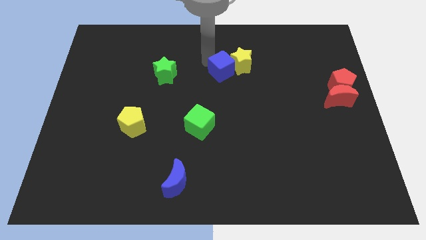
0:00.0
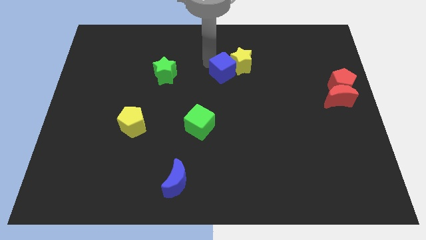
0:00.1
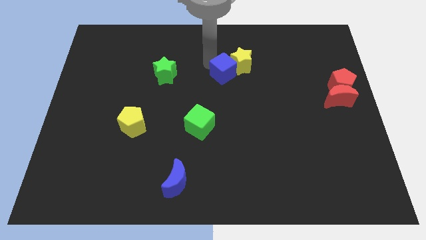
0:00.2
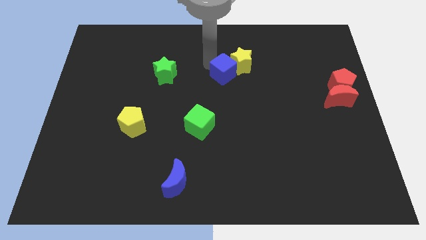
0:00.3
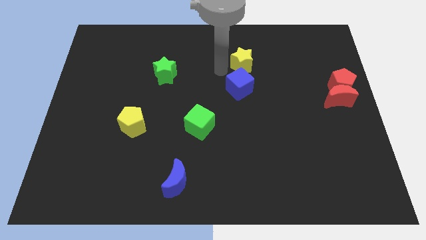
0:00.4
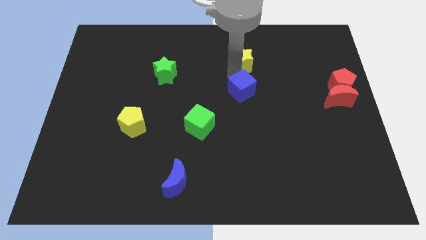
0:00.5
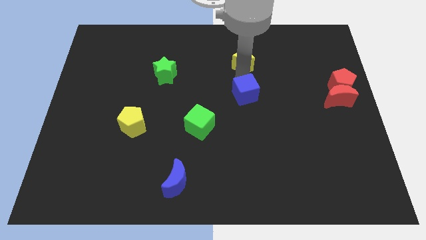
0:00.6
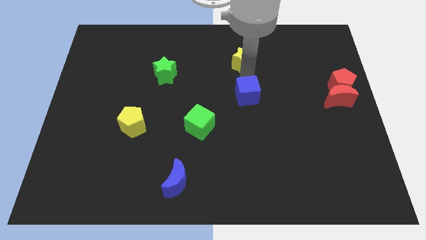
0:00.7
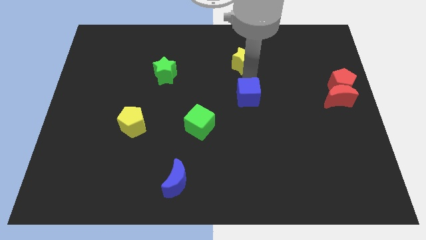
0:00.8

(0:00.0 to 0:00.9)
move the blue cube below the yellow star

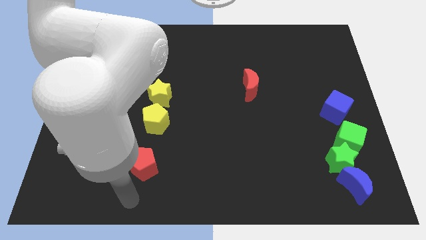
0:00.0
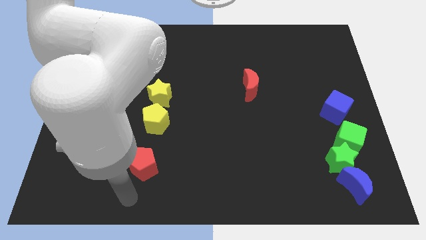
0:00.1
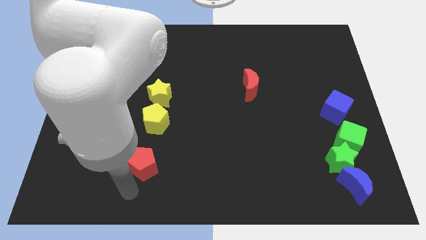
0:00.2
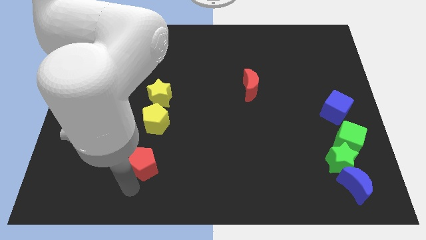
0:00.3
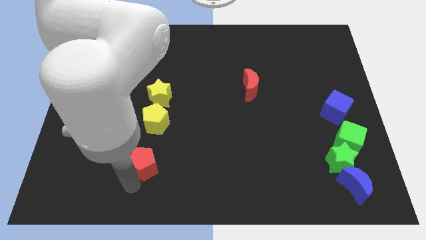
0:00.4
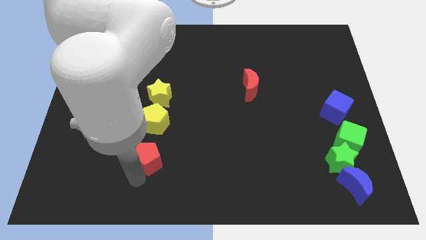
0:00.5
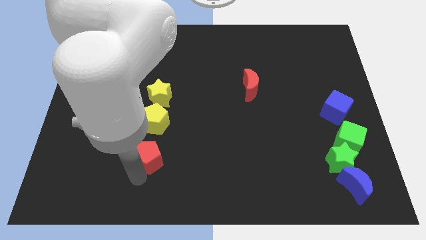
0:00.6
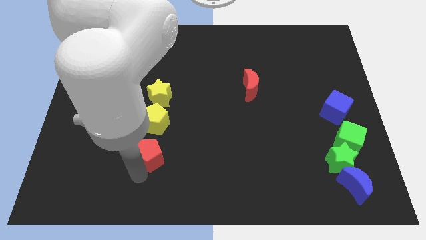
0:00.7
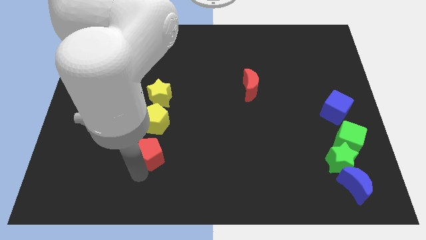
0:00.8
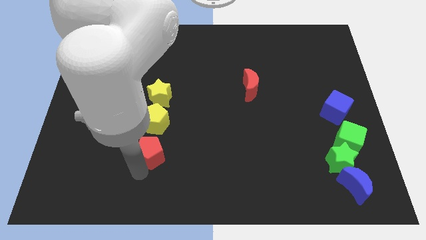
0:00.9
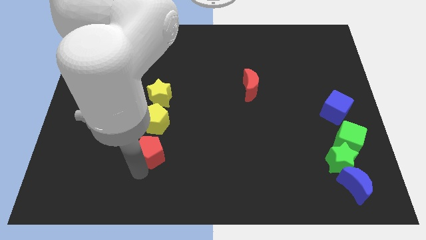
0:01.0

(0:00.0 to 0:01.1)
move the red pentagon vertically below the yellow pentagon

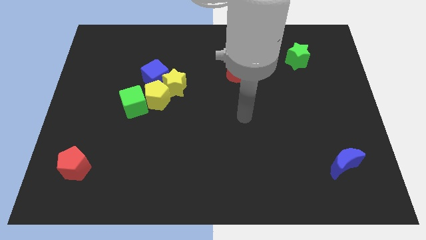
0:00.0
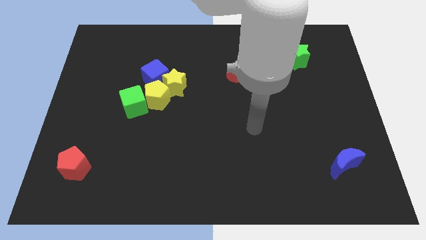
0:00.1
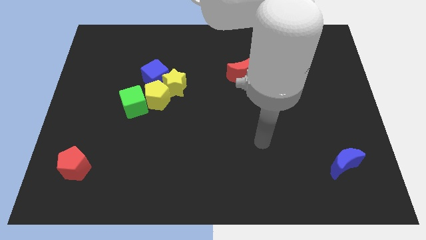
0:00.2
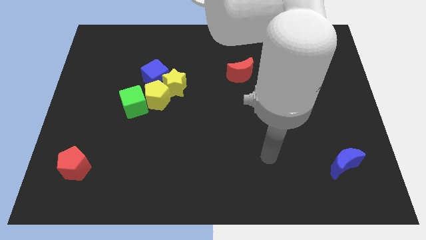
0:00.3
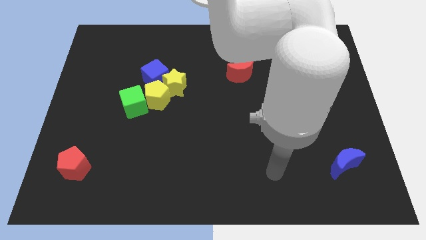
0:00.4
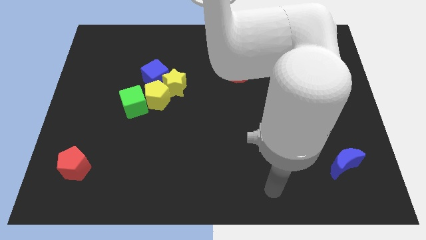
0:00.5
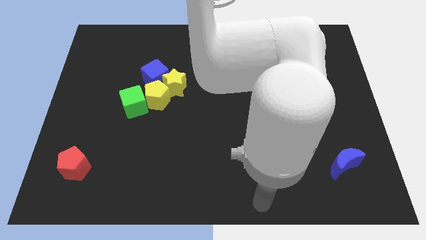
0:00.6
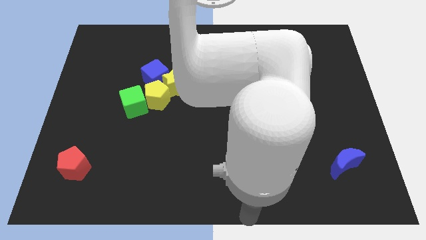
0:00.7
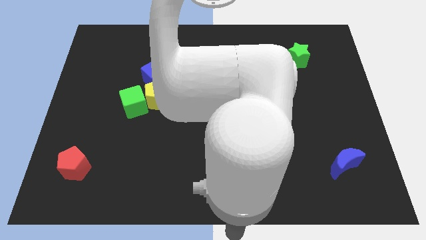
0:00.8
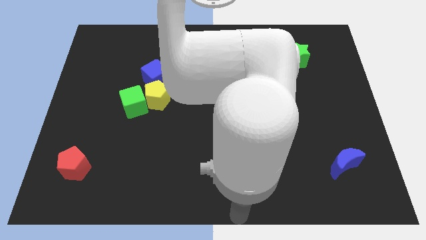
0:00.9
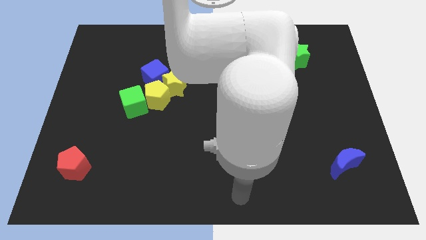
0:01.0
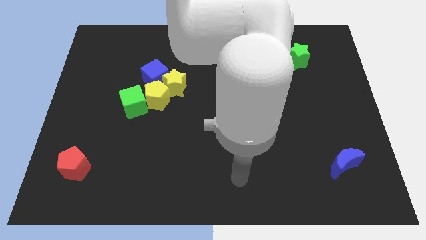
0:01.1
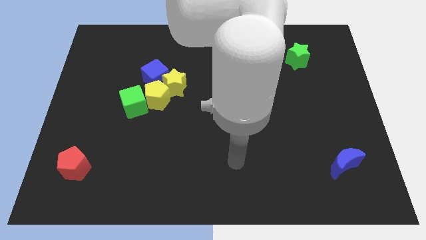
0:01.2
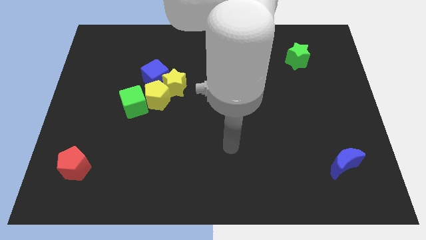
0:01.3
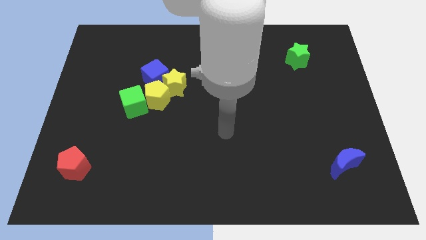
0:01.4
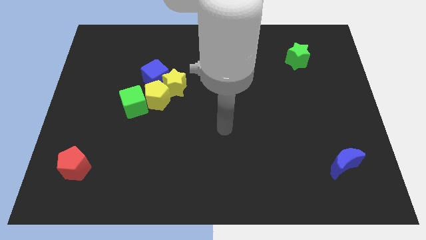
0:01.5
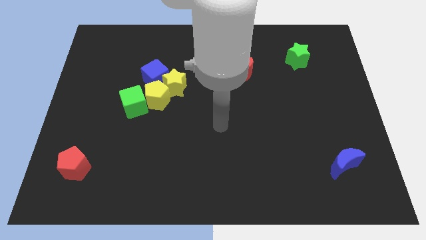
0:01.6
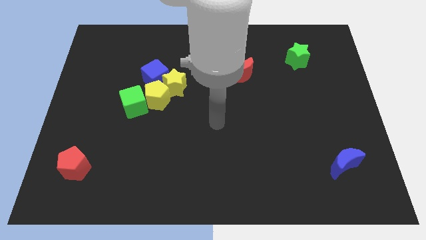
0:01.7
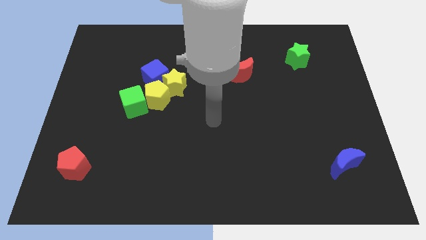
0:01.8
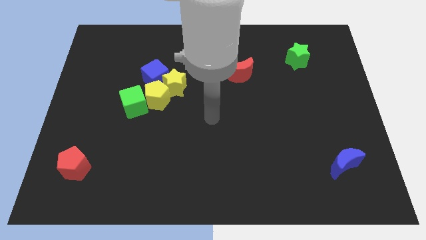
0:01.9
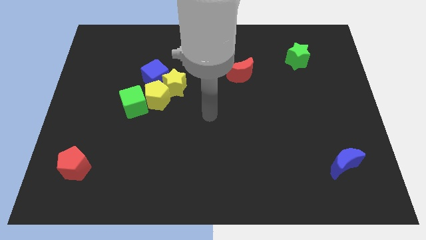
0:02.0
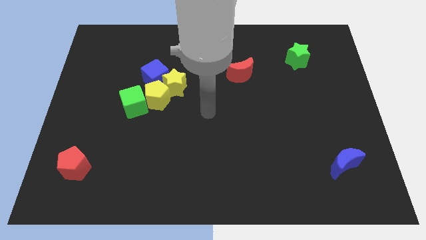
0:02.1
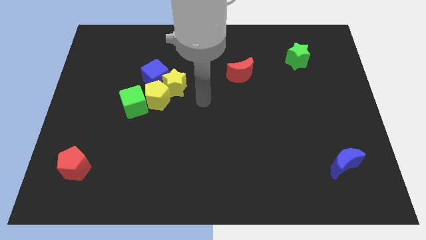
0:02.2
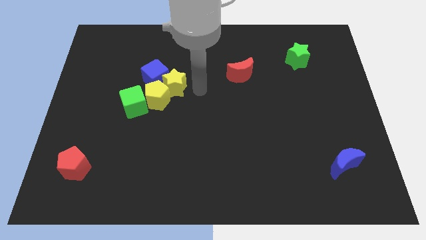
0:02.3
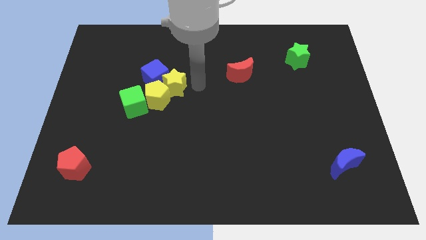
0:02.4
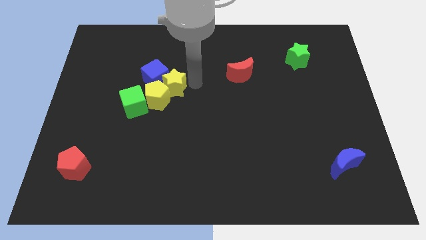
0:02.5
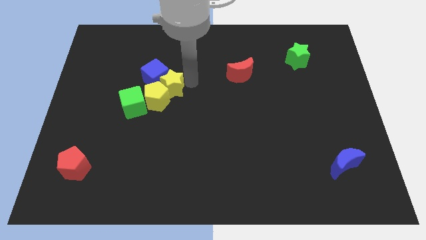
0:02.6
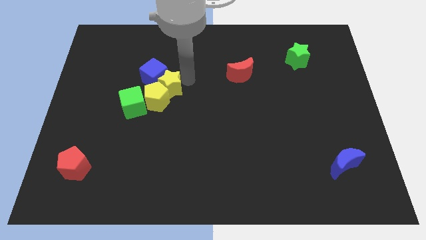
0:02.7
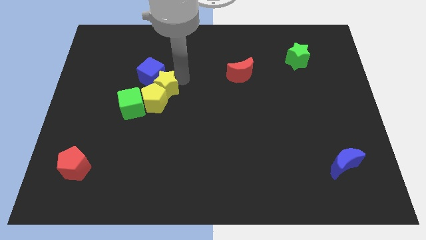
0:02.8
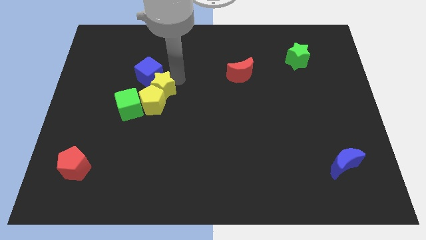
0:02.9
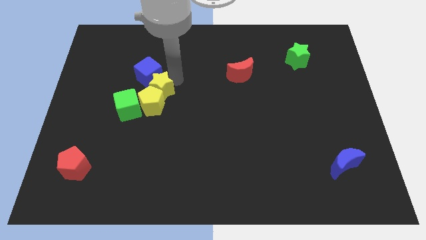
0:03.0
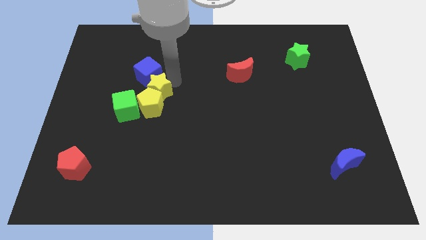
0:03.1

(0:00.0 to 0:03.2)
slightly move a group of blocks to the left side of the board

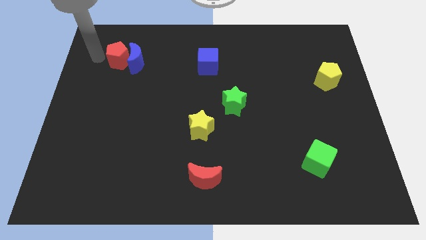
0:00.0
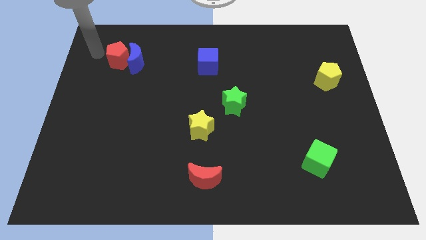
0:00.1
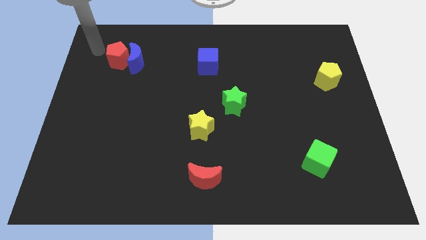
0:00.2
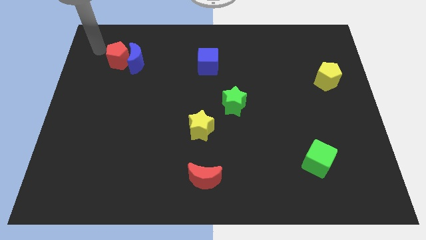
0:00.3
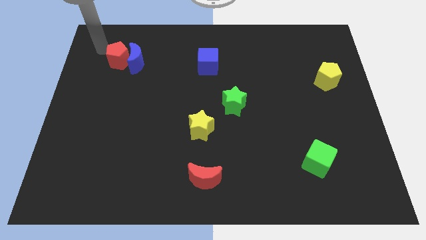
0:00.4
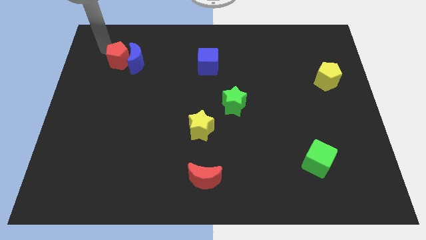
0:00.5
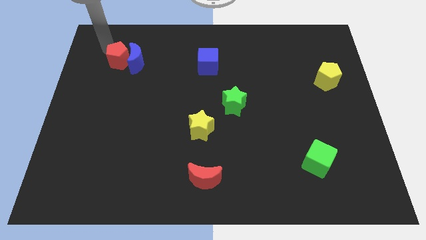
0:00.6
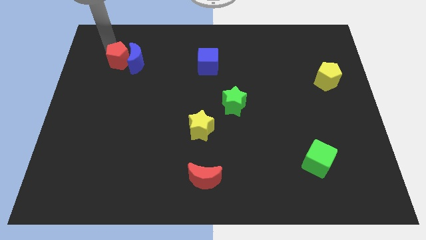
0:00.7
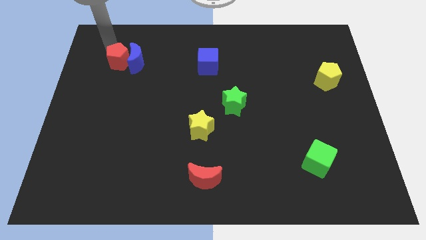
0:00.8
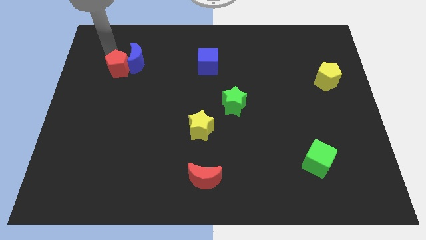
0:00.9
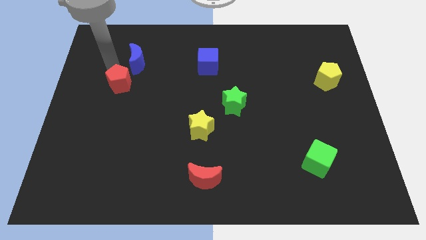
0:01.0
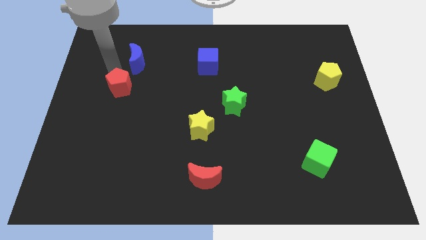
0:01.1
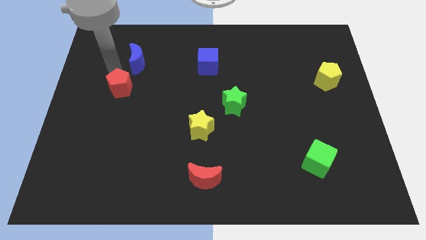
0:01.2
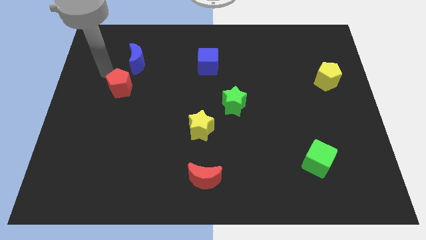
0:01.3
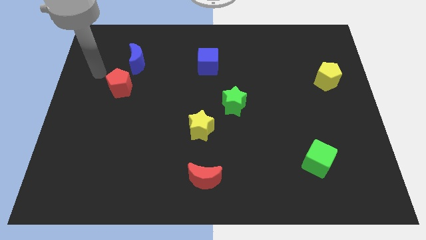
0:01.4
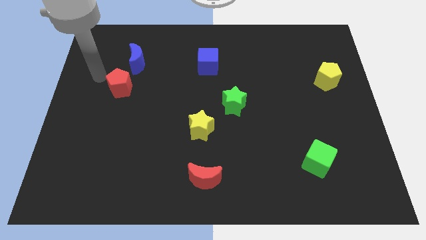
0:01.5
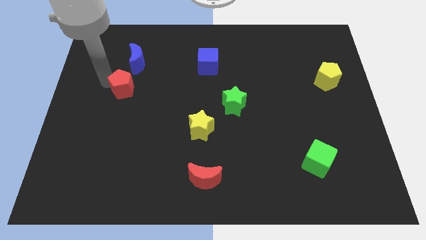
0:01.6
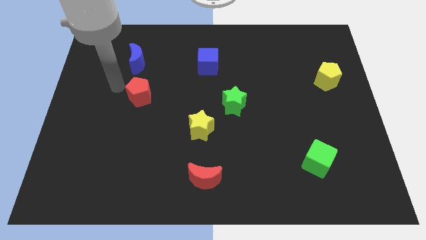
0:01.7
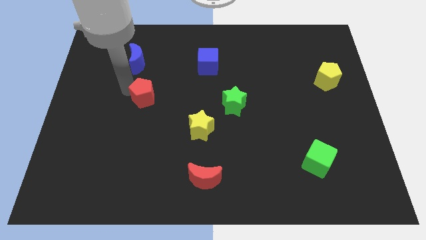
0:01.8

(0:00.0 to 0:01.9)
separate the red pentagon from the blue moon

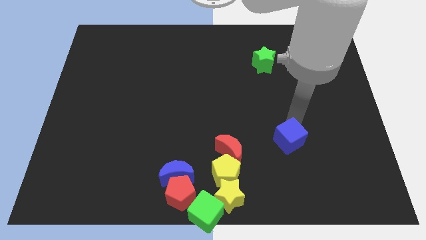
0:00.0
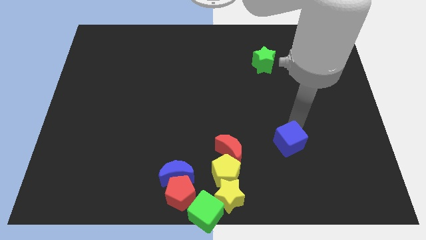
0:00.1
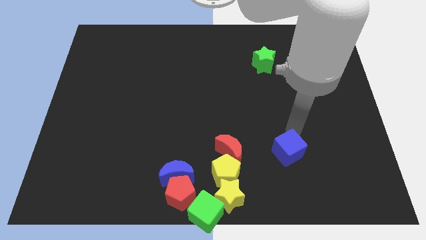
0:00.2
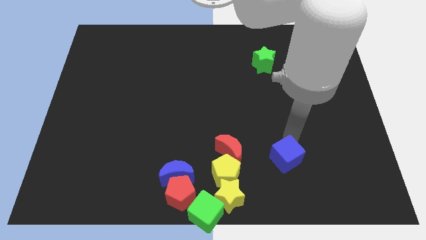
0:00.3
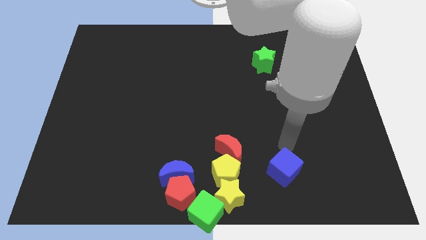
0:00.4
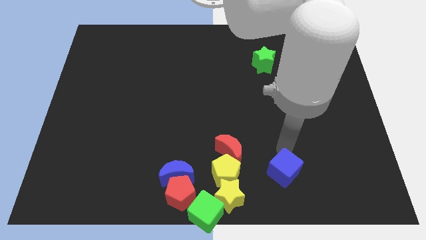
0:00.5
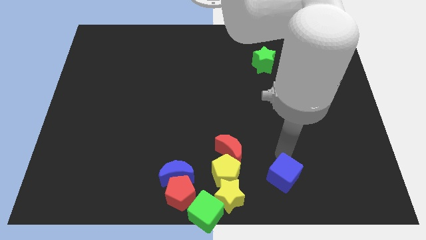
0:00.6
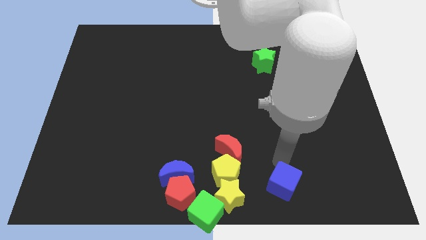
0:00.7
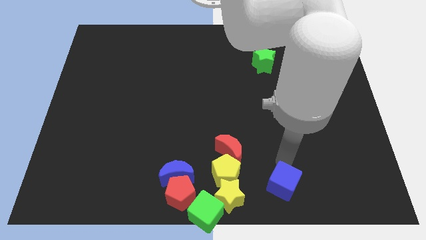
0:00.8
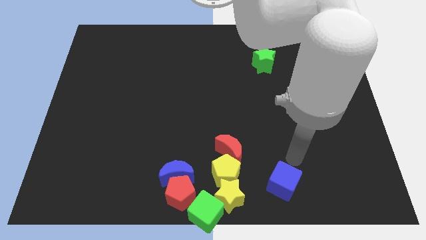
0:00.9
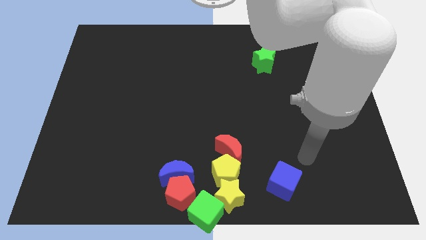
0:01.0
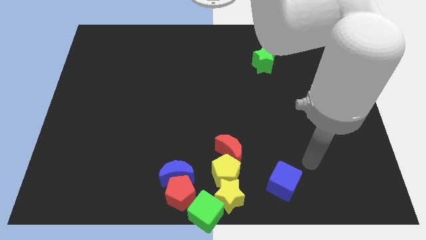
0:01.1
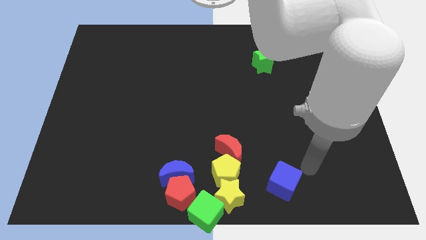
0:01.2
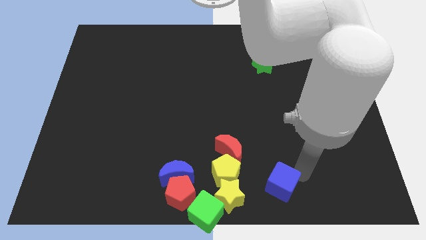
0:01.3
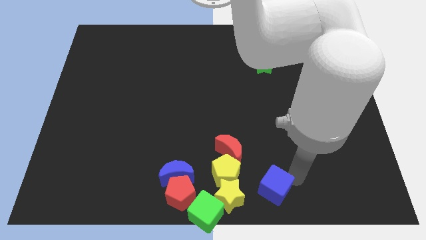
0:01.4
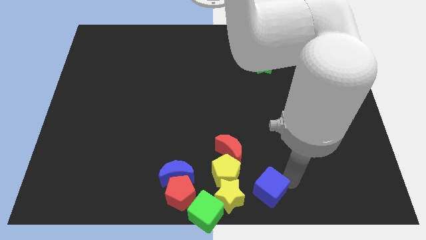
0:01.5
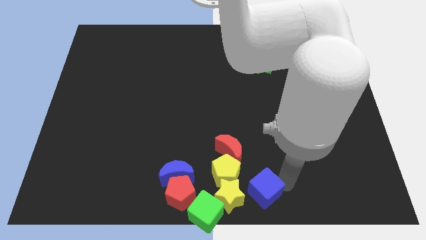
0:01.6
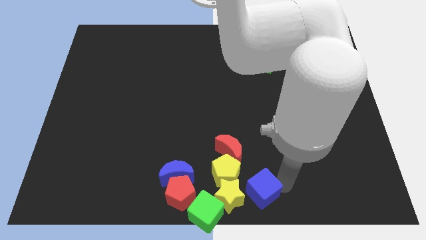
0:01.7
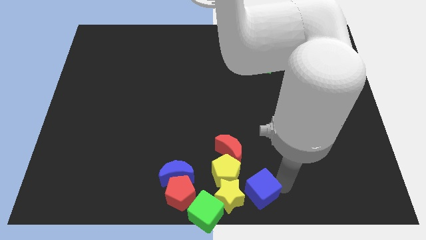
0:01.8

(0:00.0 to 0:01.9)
move blue cube to the right of the yellow star

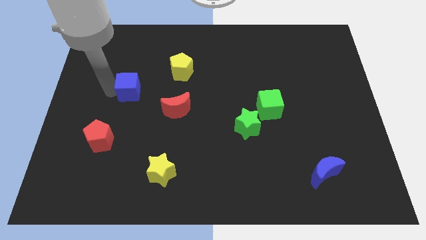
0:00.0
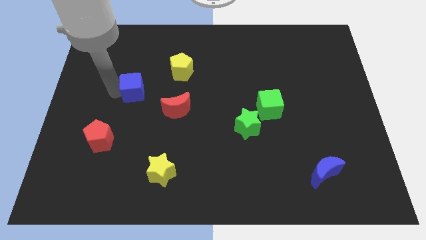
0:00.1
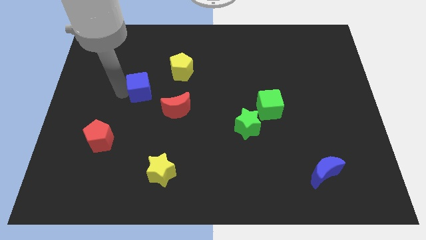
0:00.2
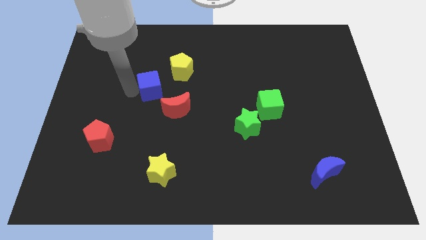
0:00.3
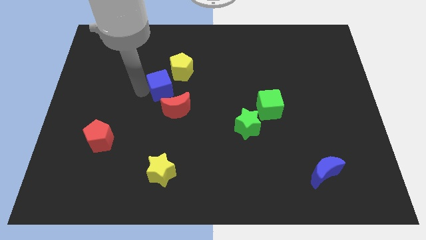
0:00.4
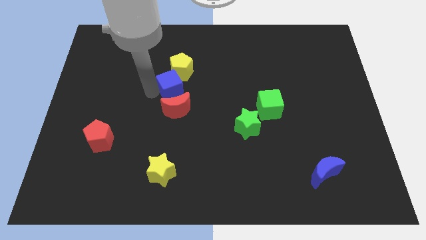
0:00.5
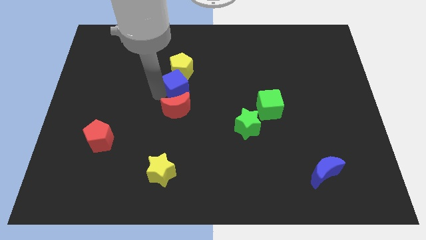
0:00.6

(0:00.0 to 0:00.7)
place the blue cube in between the red crescent and the yellow pentagon
